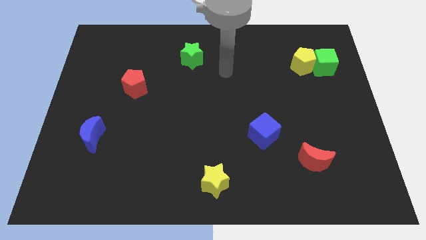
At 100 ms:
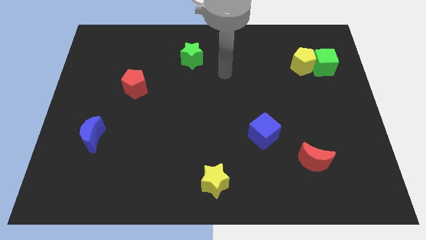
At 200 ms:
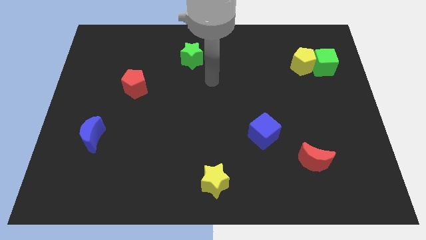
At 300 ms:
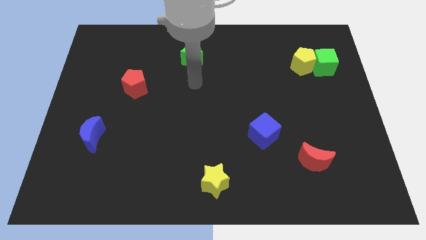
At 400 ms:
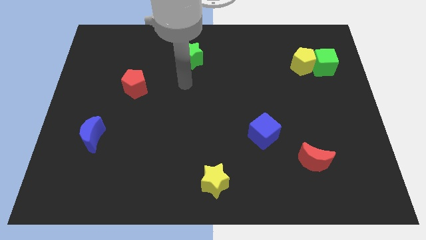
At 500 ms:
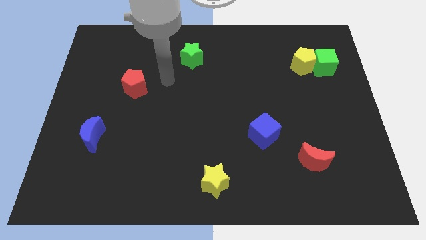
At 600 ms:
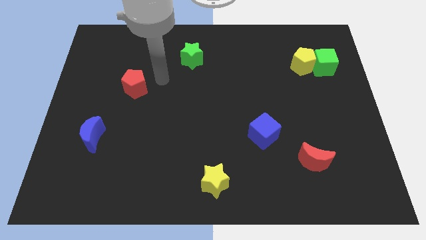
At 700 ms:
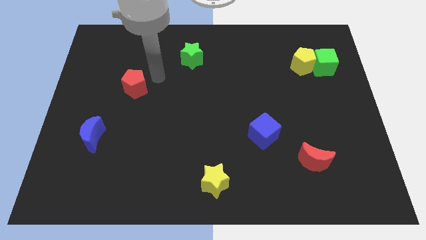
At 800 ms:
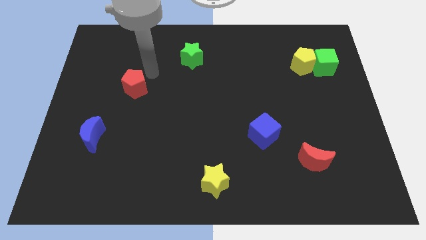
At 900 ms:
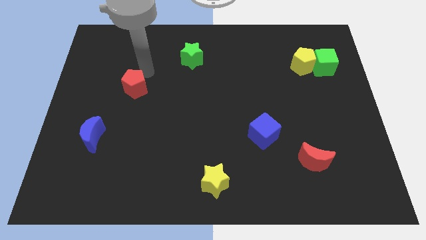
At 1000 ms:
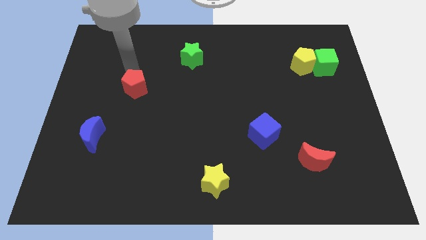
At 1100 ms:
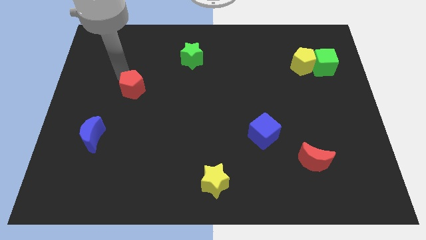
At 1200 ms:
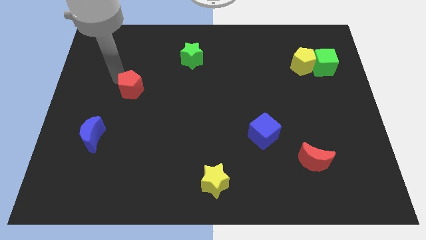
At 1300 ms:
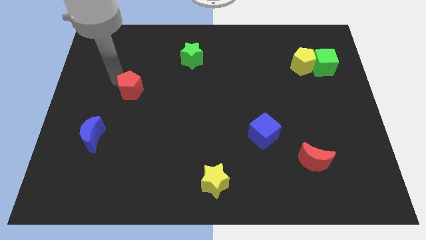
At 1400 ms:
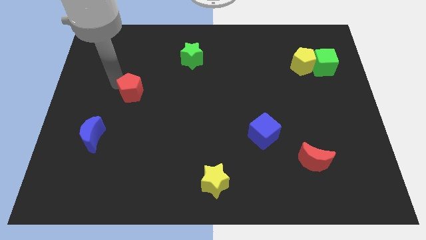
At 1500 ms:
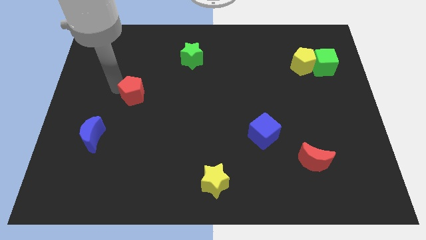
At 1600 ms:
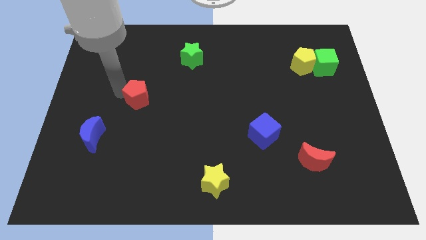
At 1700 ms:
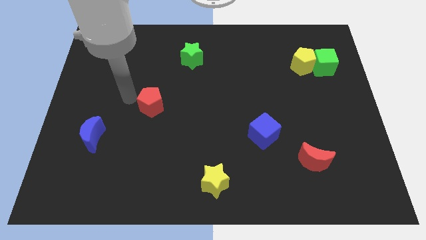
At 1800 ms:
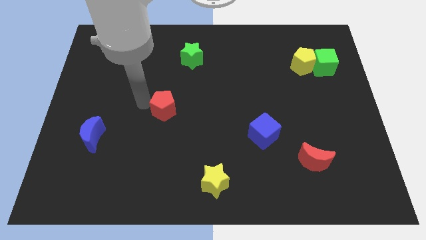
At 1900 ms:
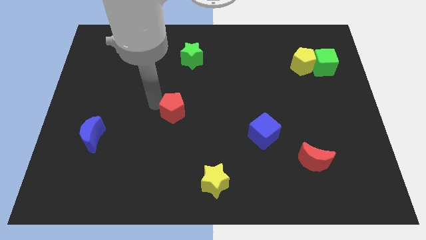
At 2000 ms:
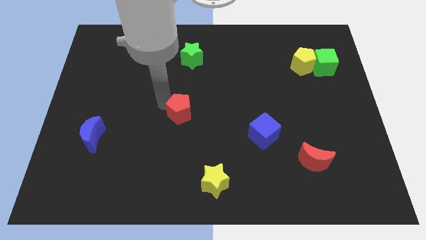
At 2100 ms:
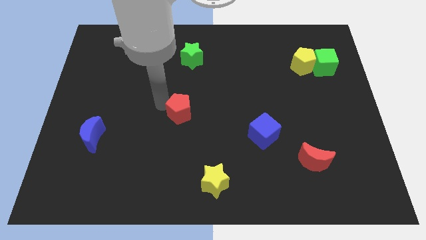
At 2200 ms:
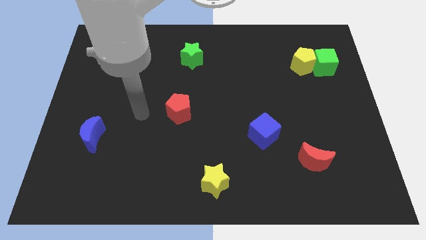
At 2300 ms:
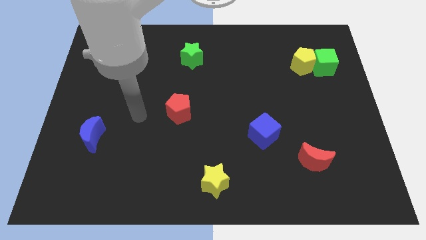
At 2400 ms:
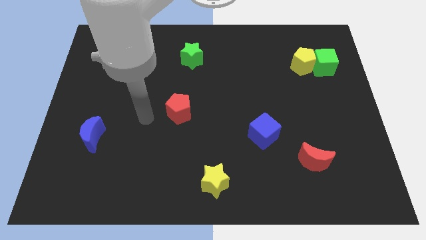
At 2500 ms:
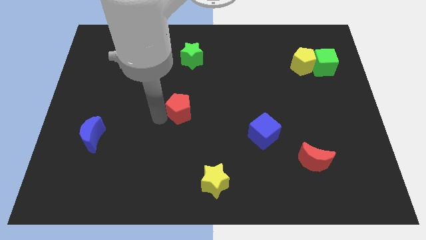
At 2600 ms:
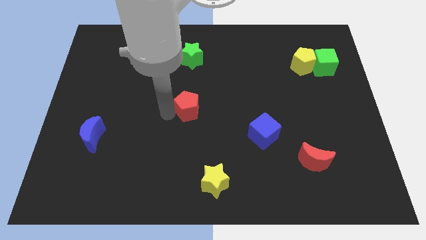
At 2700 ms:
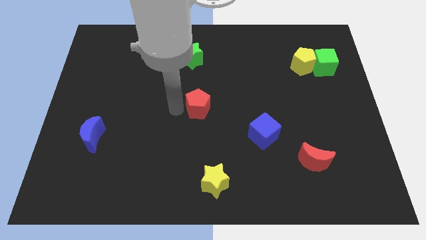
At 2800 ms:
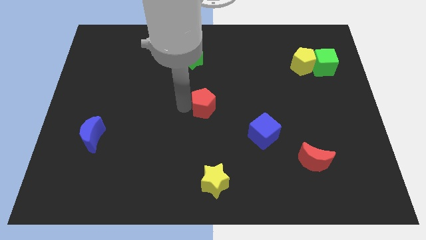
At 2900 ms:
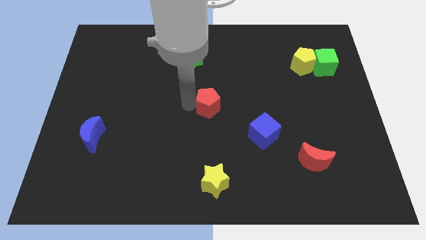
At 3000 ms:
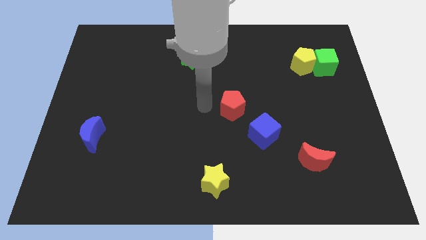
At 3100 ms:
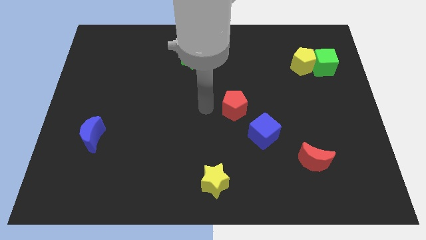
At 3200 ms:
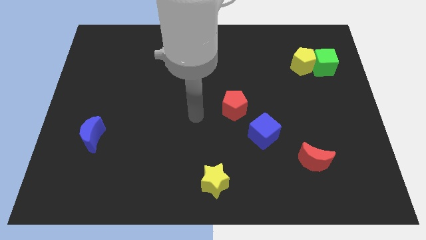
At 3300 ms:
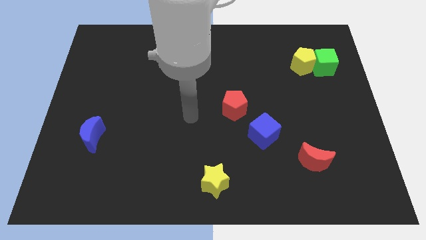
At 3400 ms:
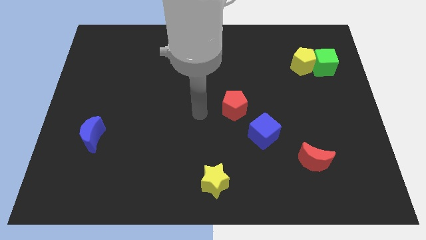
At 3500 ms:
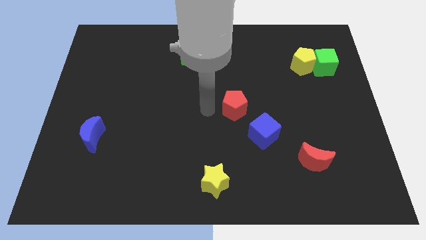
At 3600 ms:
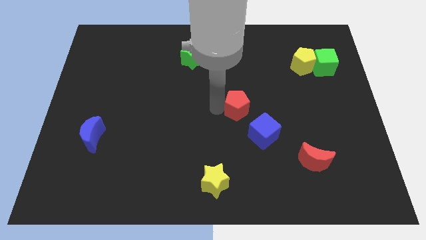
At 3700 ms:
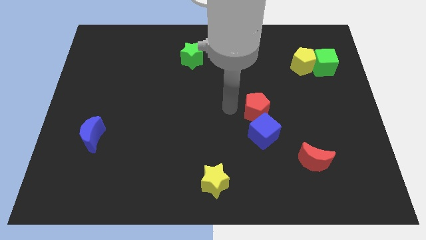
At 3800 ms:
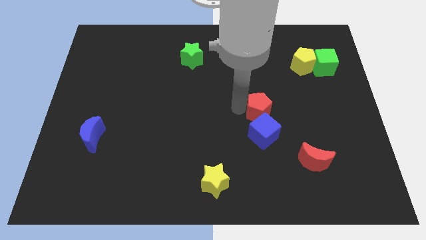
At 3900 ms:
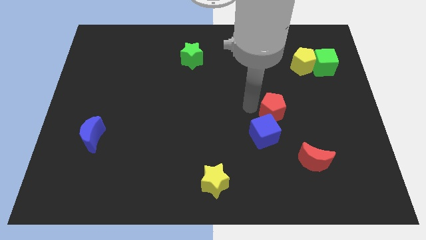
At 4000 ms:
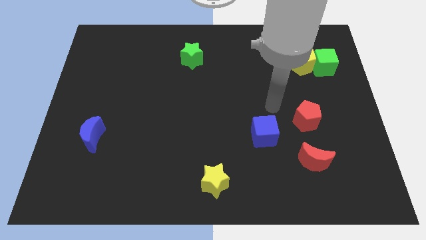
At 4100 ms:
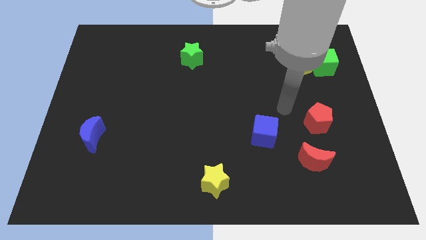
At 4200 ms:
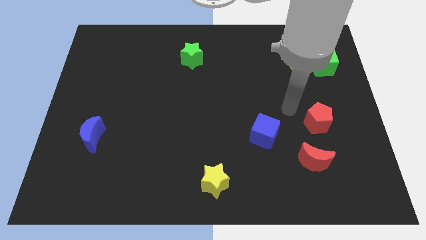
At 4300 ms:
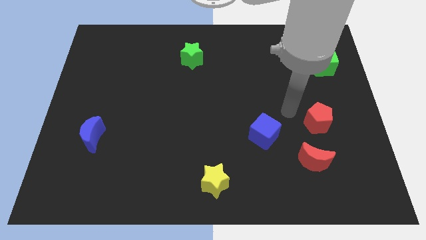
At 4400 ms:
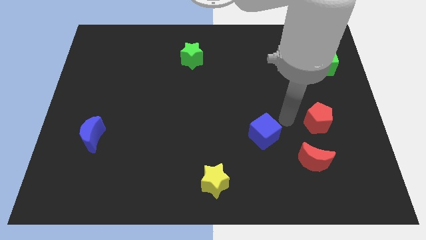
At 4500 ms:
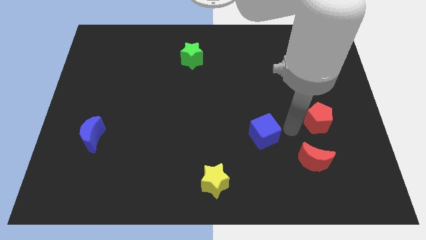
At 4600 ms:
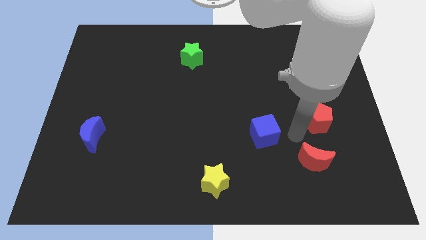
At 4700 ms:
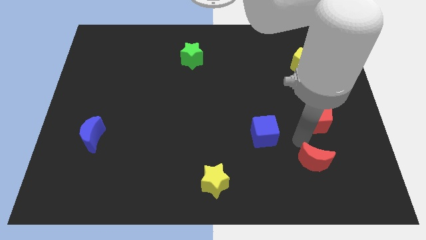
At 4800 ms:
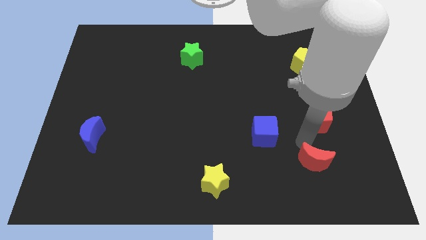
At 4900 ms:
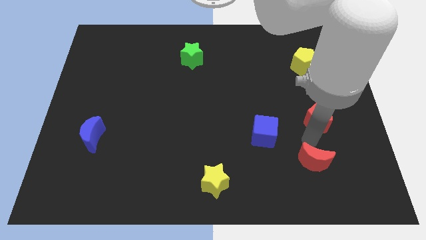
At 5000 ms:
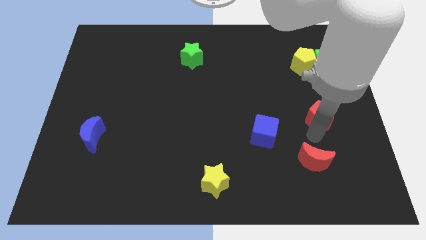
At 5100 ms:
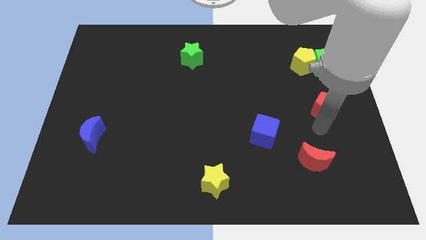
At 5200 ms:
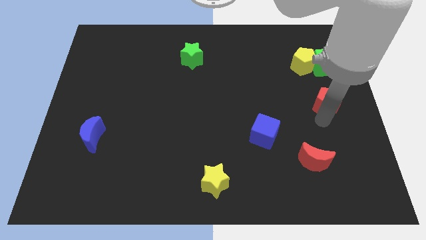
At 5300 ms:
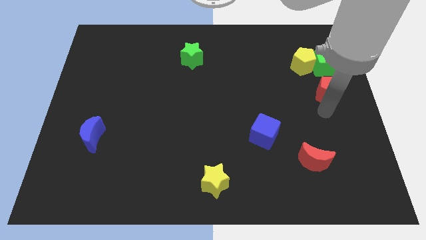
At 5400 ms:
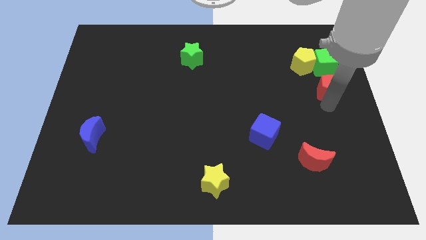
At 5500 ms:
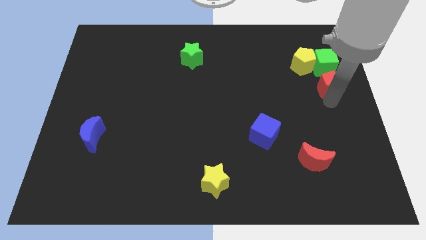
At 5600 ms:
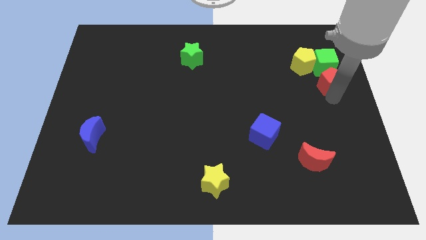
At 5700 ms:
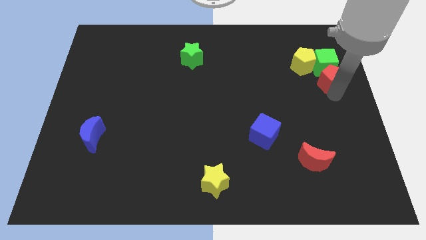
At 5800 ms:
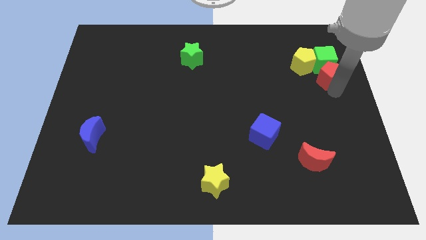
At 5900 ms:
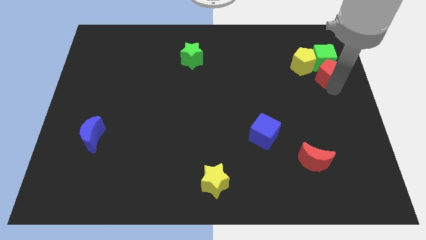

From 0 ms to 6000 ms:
move the red pentagon to the green cube

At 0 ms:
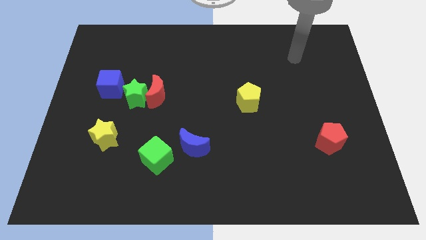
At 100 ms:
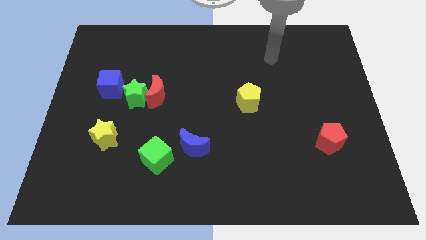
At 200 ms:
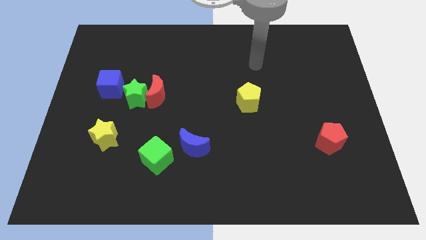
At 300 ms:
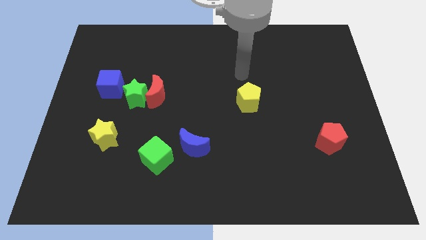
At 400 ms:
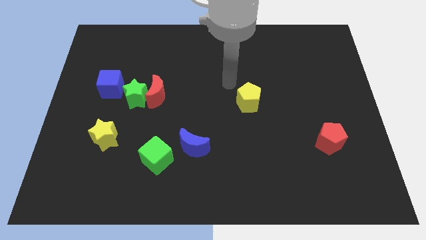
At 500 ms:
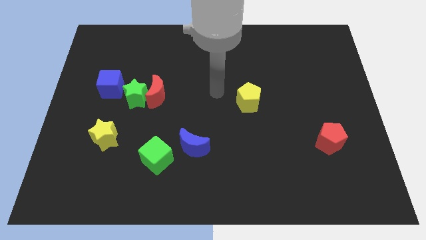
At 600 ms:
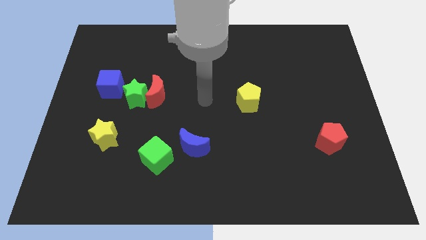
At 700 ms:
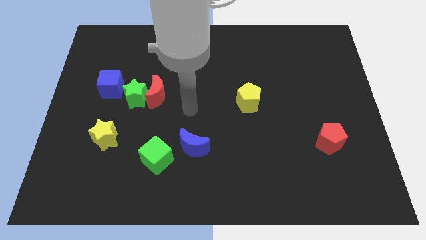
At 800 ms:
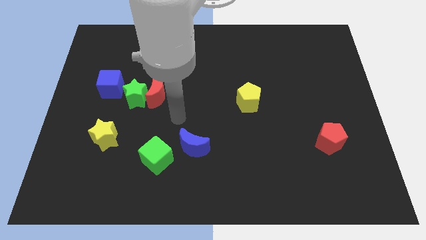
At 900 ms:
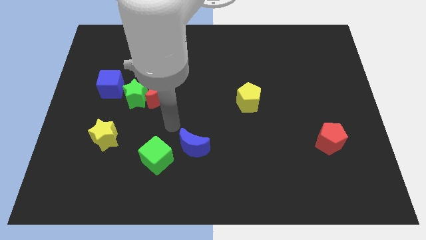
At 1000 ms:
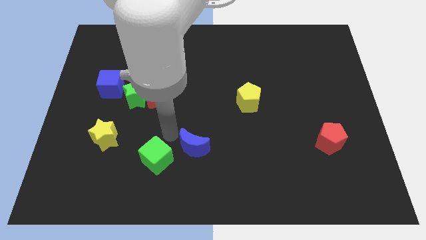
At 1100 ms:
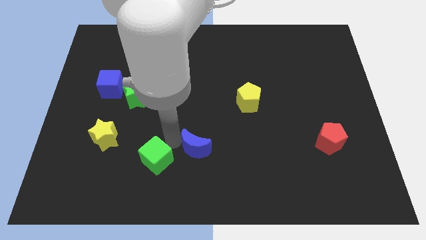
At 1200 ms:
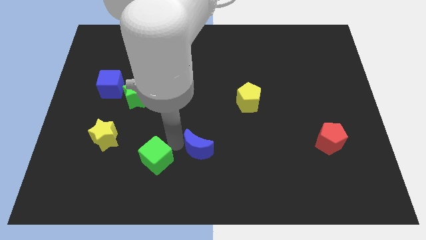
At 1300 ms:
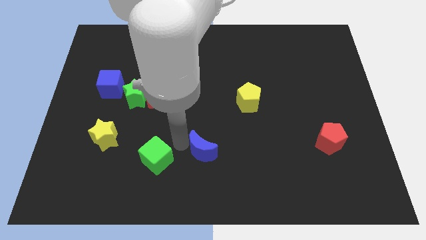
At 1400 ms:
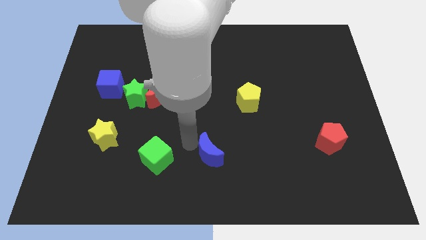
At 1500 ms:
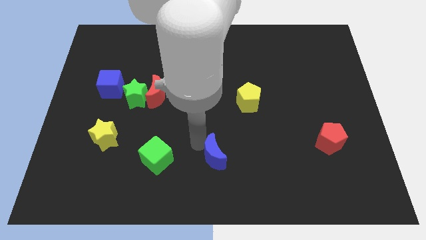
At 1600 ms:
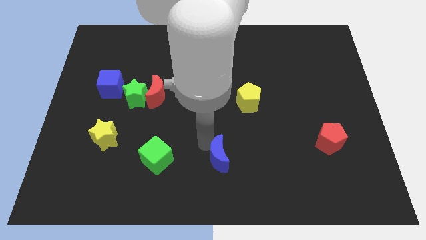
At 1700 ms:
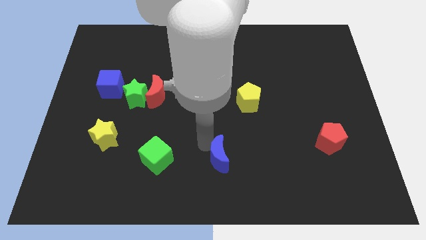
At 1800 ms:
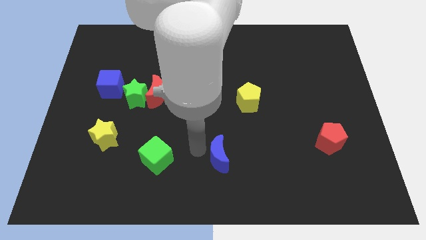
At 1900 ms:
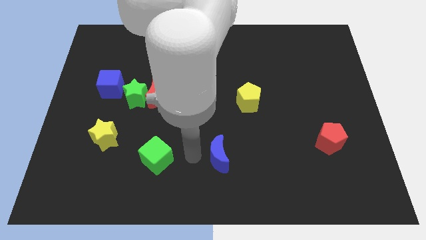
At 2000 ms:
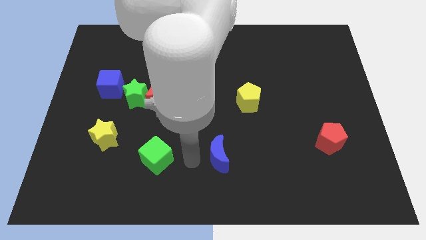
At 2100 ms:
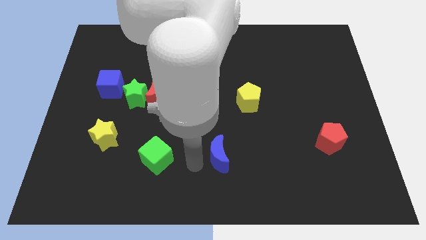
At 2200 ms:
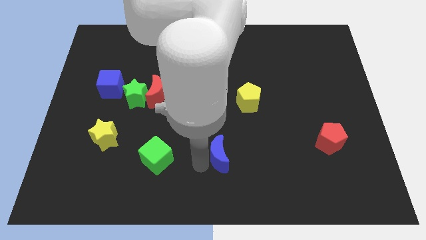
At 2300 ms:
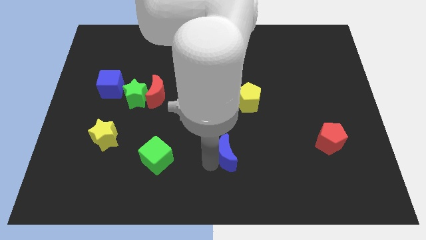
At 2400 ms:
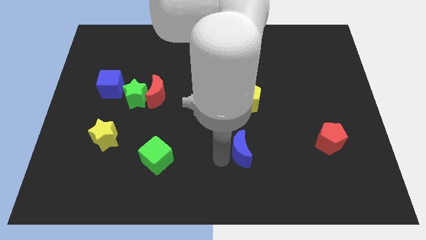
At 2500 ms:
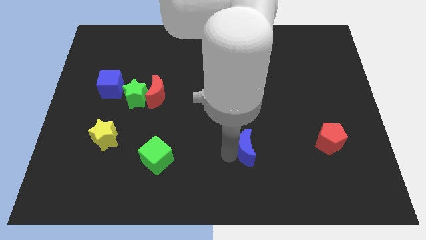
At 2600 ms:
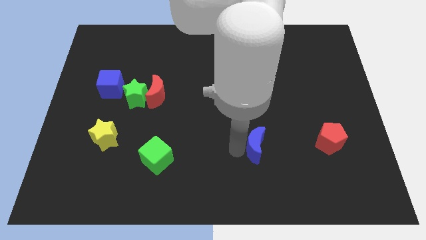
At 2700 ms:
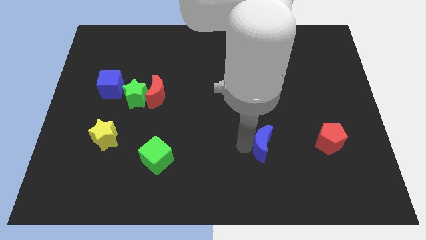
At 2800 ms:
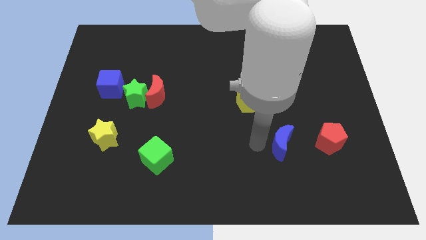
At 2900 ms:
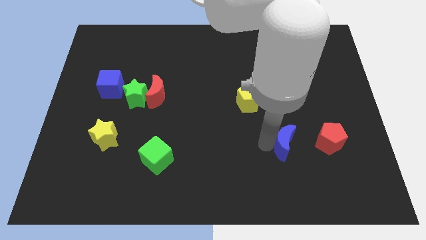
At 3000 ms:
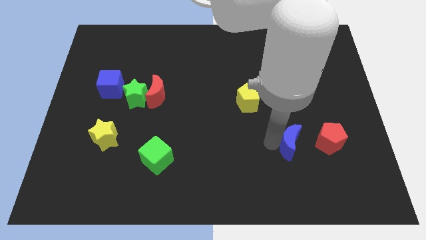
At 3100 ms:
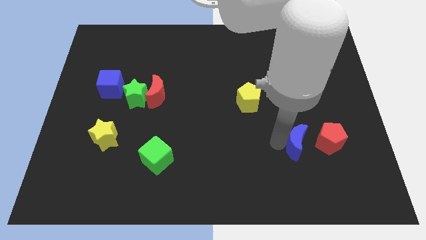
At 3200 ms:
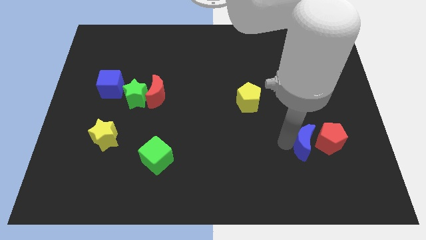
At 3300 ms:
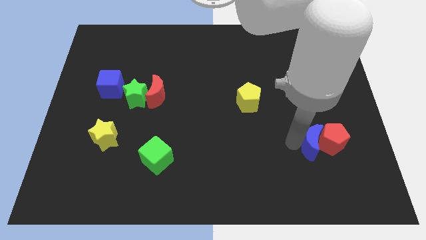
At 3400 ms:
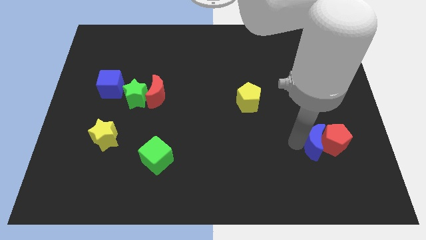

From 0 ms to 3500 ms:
put the blue moon to the red pentagon
